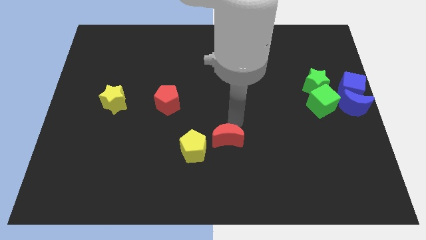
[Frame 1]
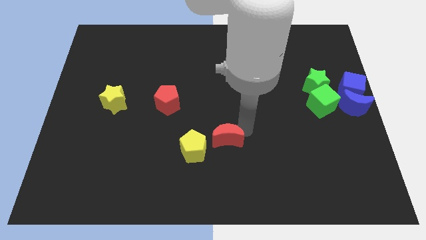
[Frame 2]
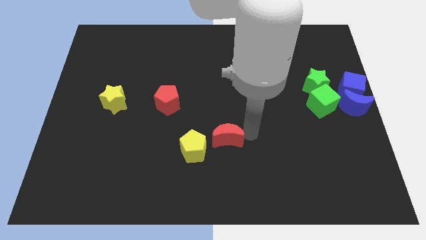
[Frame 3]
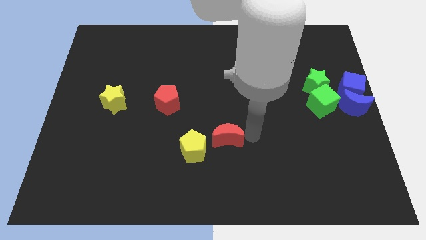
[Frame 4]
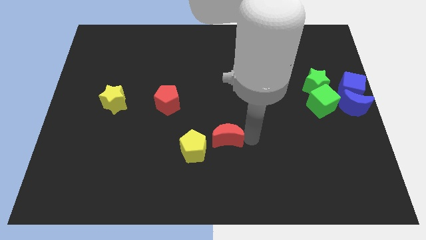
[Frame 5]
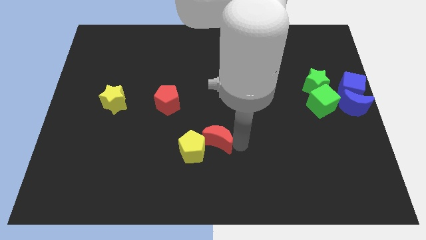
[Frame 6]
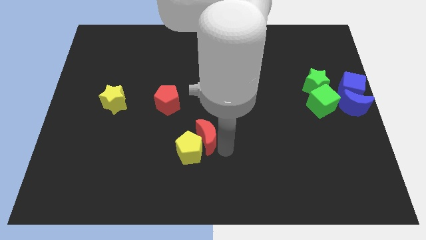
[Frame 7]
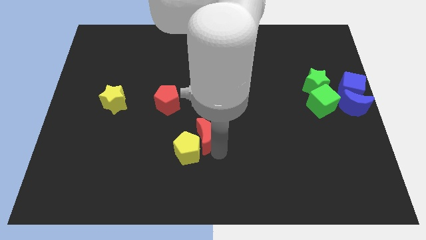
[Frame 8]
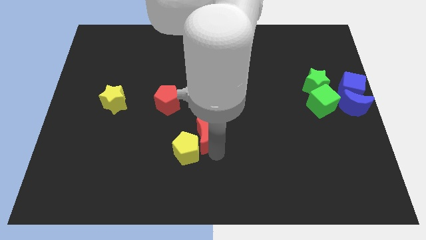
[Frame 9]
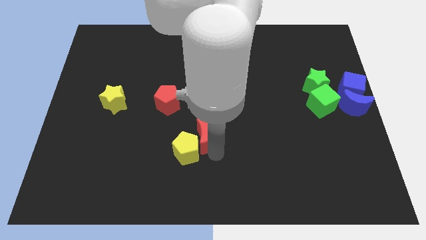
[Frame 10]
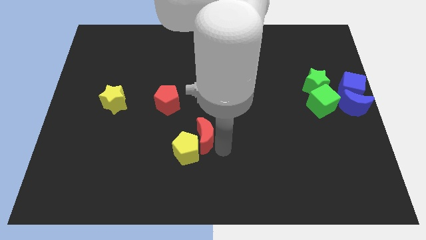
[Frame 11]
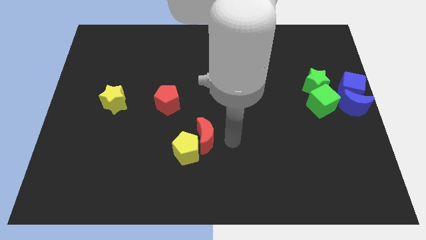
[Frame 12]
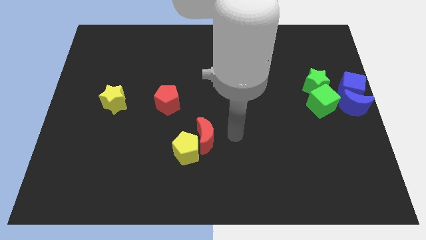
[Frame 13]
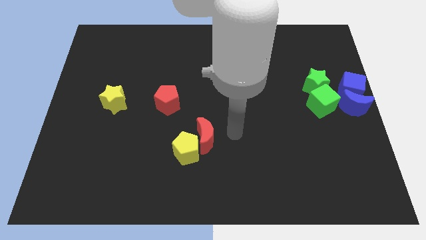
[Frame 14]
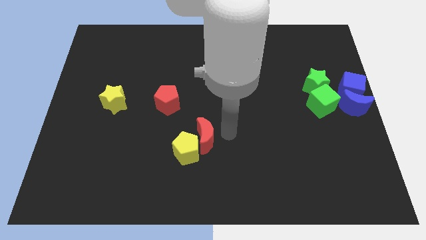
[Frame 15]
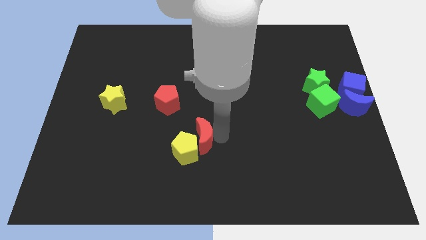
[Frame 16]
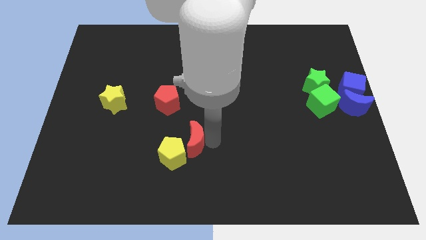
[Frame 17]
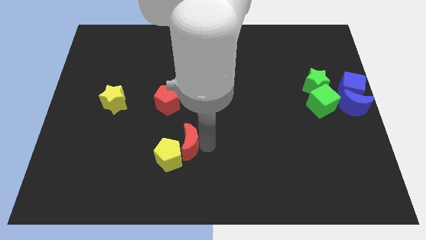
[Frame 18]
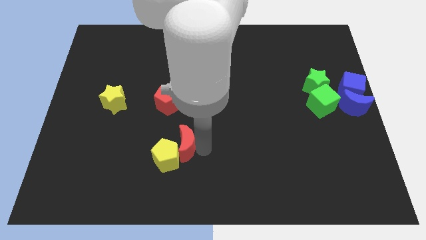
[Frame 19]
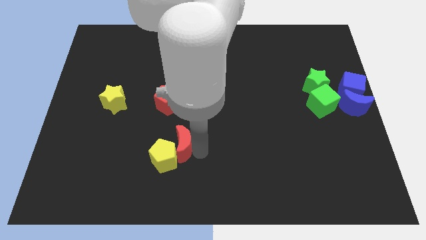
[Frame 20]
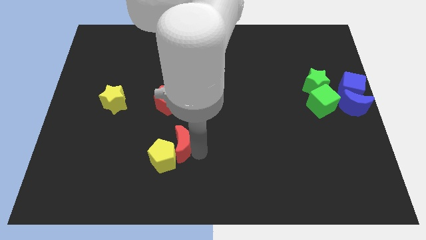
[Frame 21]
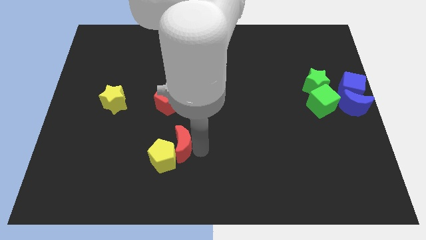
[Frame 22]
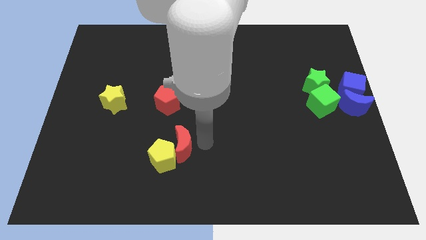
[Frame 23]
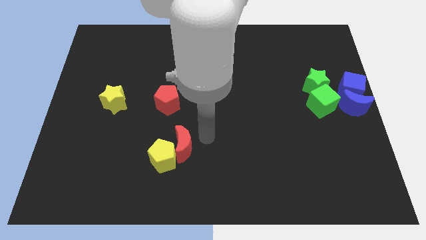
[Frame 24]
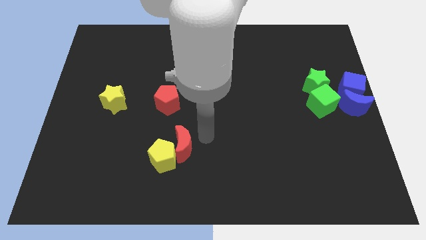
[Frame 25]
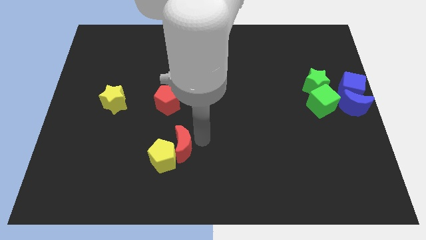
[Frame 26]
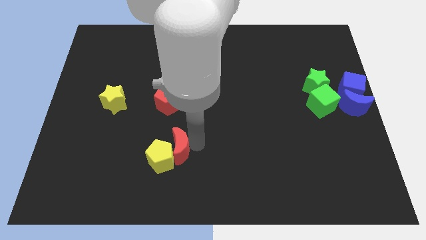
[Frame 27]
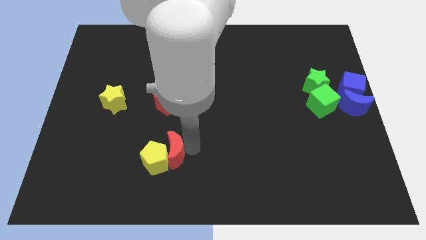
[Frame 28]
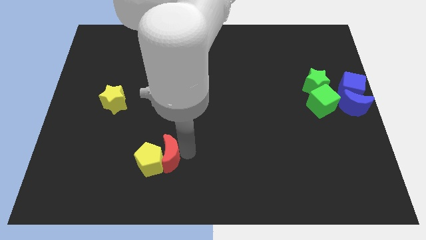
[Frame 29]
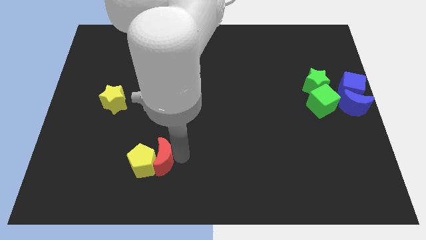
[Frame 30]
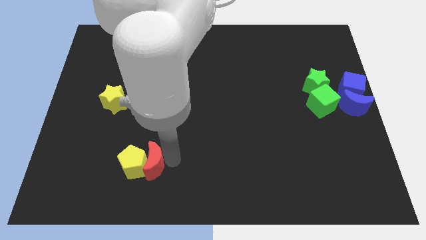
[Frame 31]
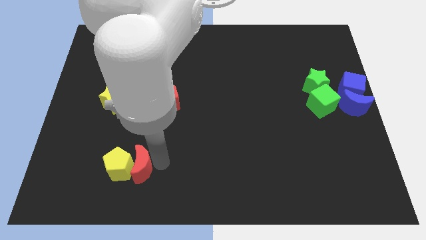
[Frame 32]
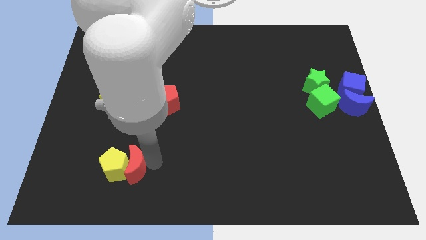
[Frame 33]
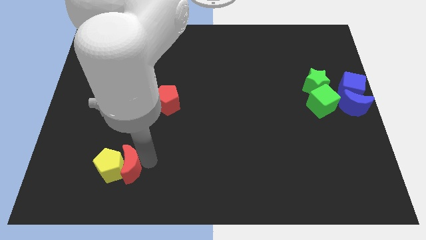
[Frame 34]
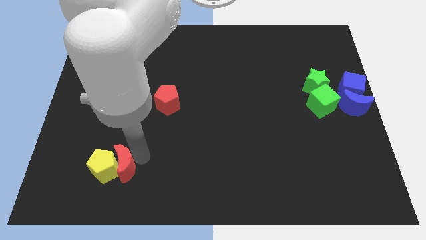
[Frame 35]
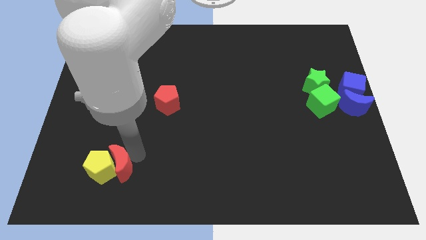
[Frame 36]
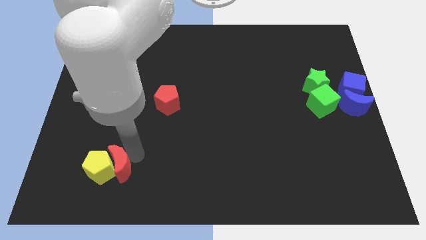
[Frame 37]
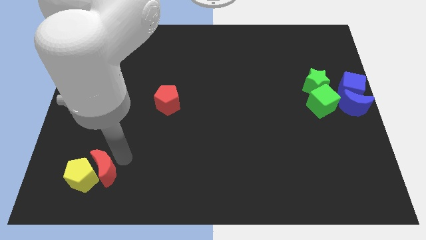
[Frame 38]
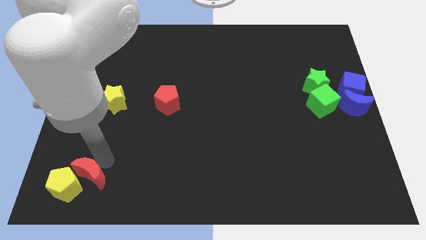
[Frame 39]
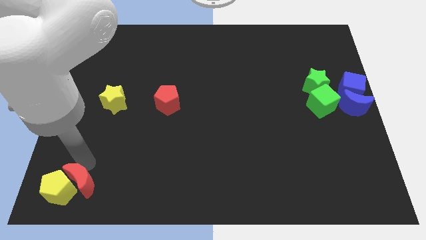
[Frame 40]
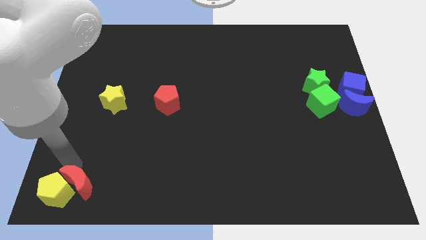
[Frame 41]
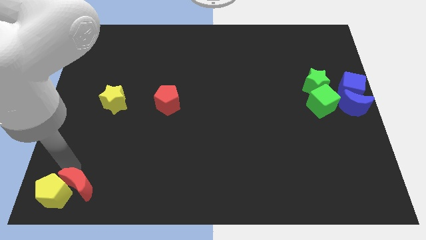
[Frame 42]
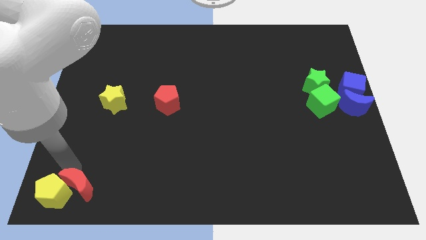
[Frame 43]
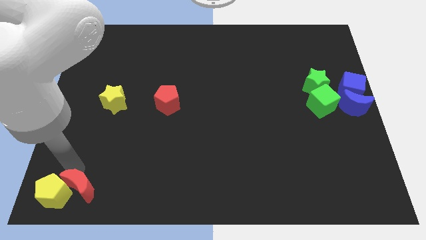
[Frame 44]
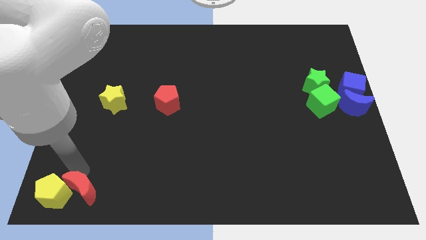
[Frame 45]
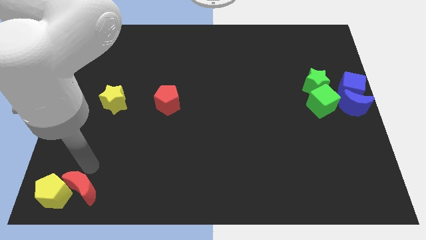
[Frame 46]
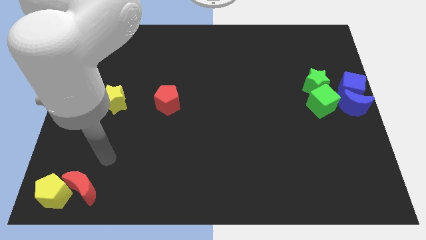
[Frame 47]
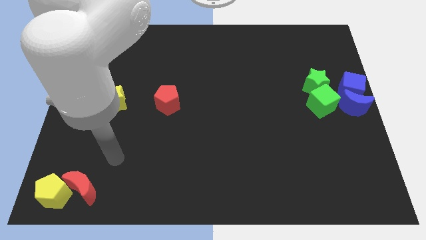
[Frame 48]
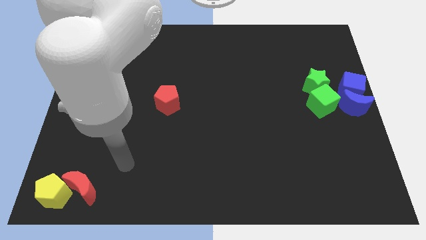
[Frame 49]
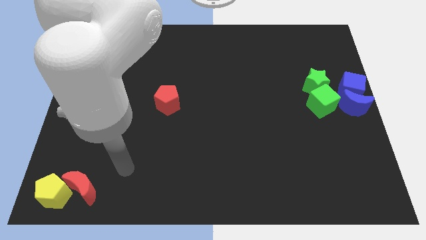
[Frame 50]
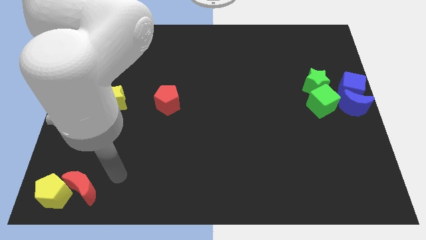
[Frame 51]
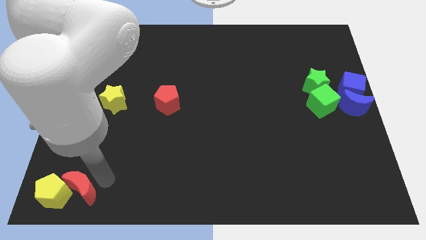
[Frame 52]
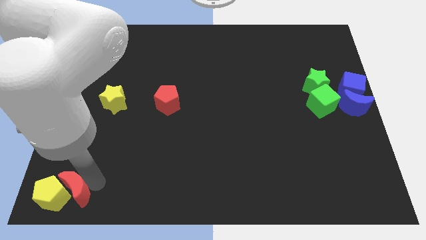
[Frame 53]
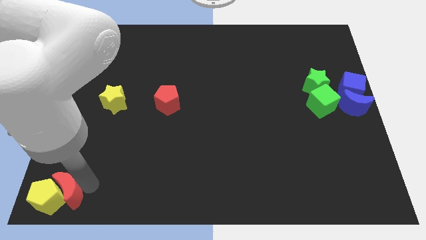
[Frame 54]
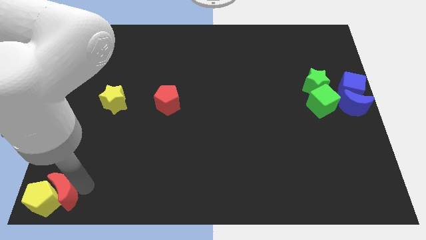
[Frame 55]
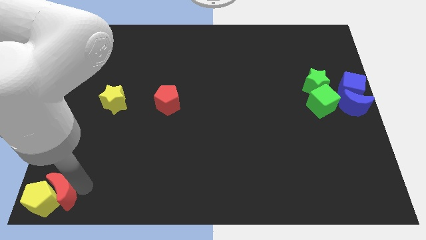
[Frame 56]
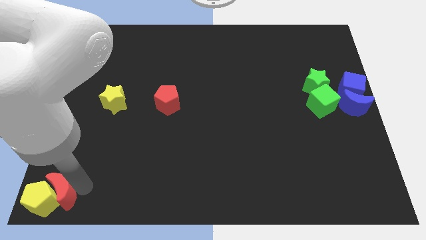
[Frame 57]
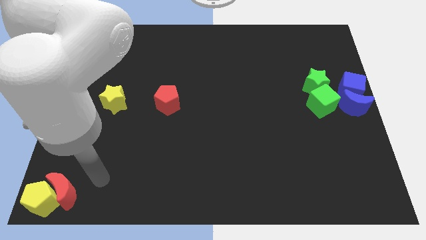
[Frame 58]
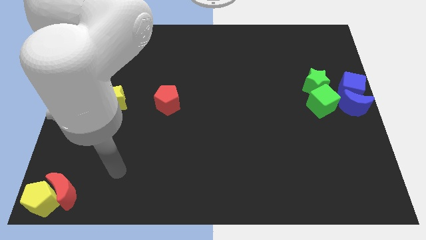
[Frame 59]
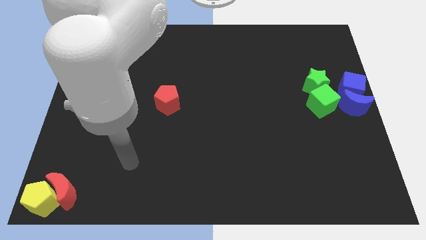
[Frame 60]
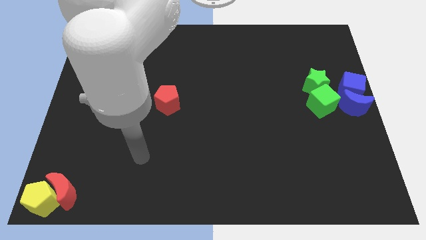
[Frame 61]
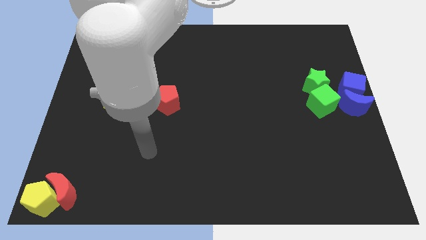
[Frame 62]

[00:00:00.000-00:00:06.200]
move the red moon and yellow pentagon to the bottom left corner

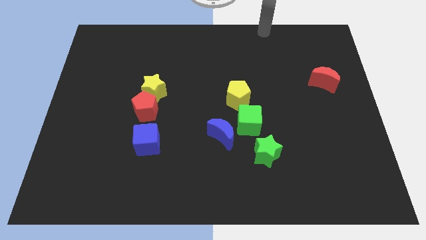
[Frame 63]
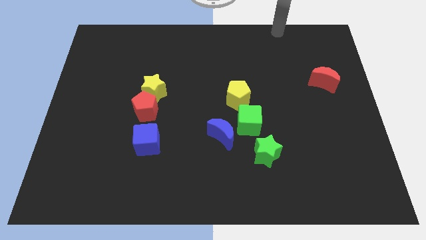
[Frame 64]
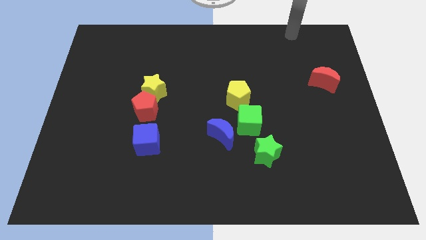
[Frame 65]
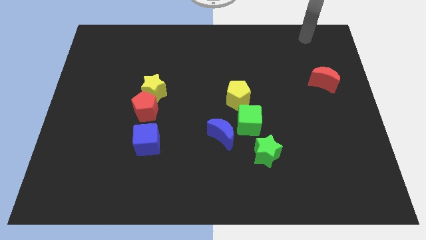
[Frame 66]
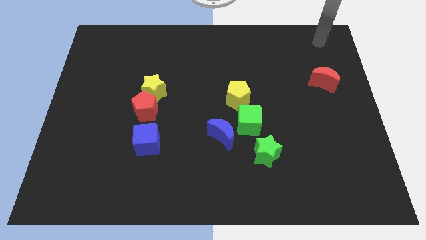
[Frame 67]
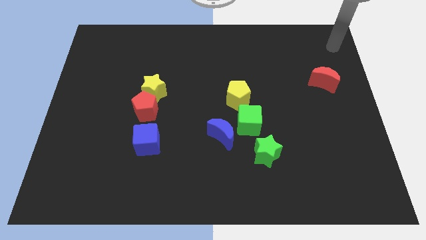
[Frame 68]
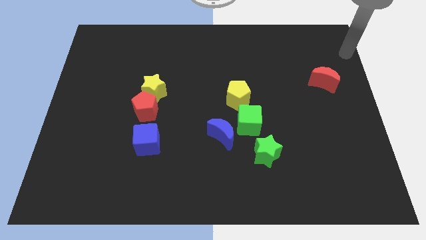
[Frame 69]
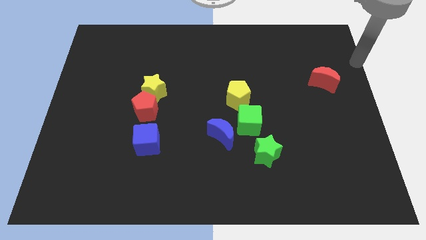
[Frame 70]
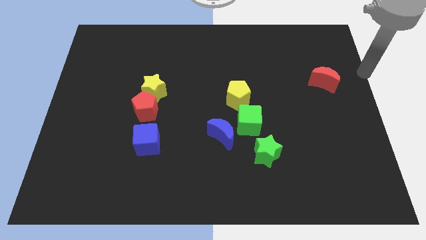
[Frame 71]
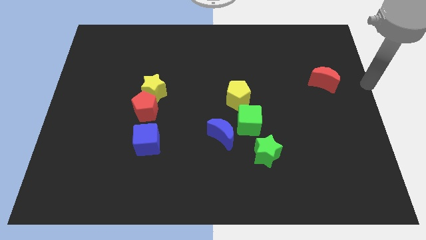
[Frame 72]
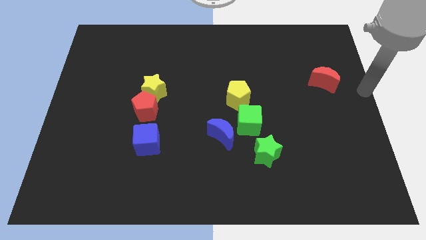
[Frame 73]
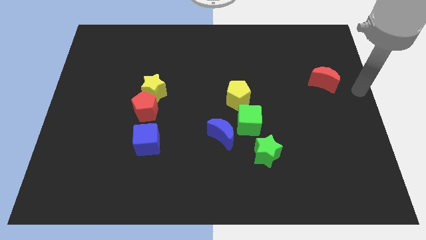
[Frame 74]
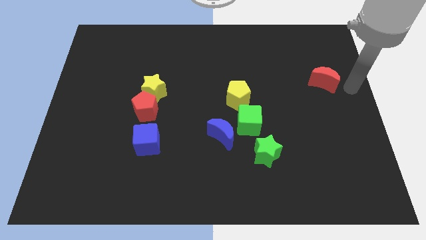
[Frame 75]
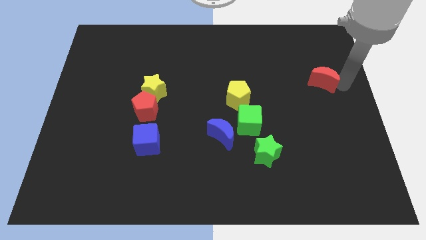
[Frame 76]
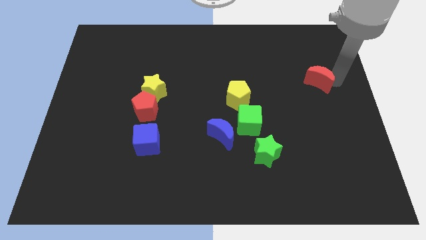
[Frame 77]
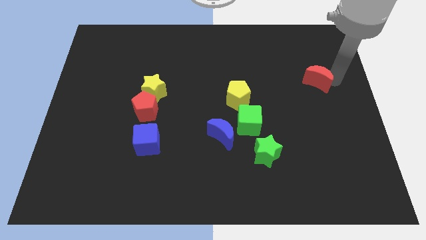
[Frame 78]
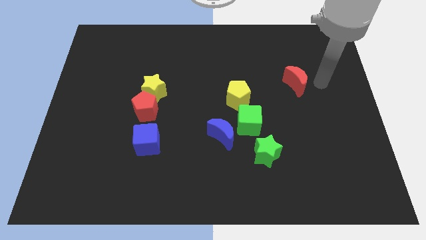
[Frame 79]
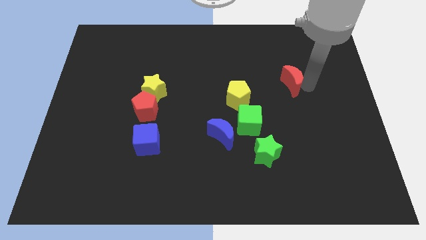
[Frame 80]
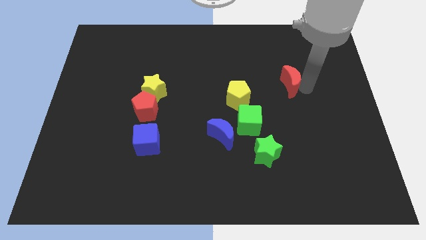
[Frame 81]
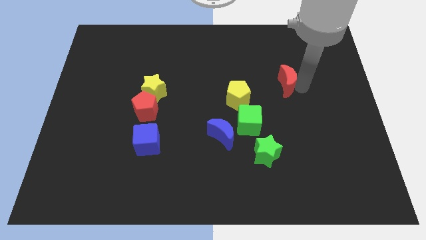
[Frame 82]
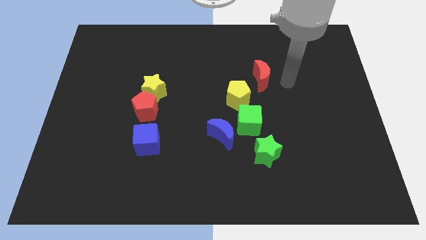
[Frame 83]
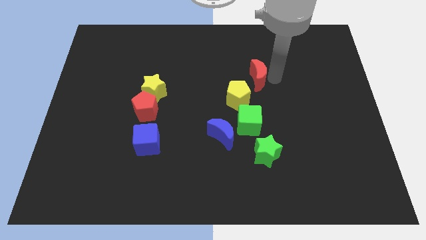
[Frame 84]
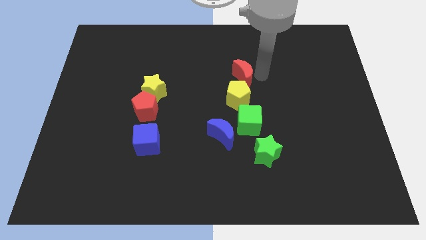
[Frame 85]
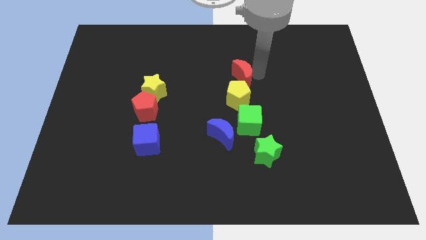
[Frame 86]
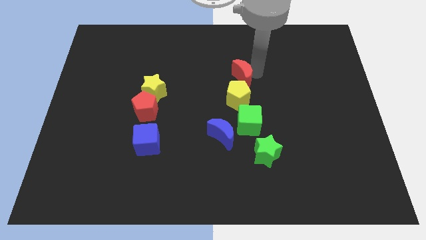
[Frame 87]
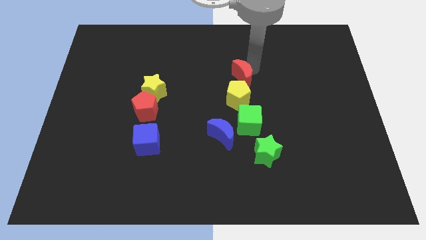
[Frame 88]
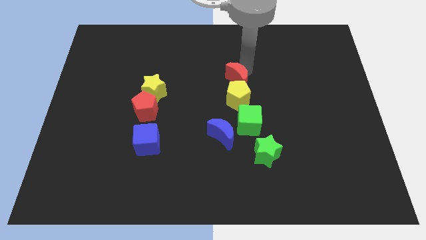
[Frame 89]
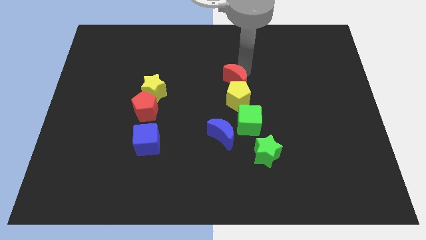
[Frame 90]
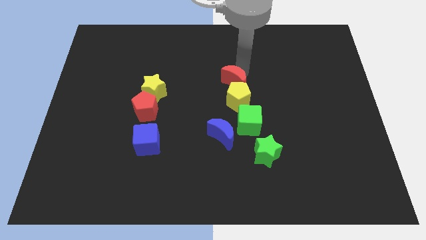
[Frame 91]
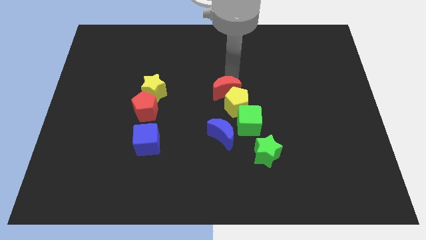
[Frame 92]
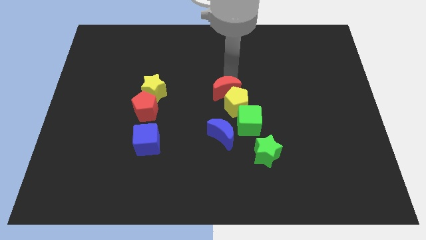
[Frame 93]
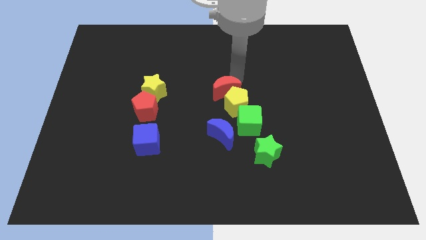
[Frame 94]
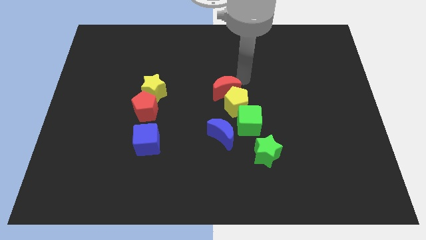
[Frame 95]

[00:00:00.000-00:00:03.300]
push the red crescent top the yellow pentagon
